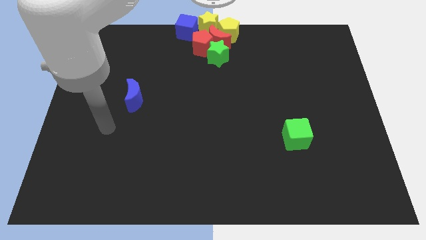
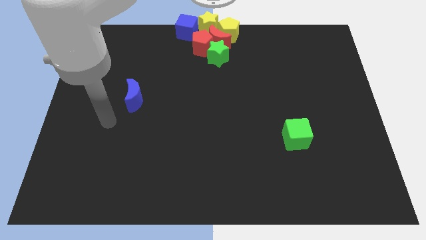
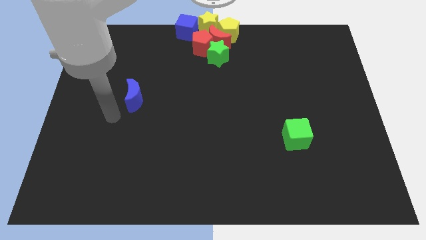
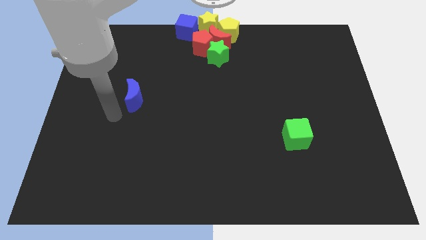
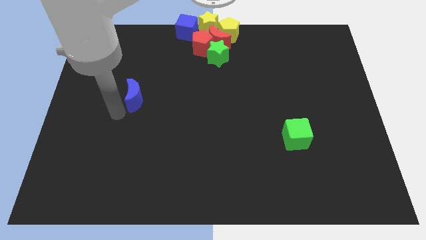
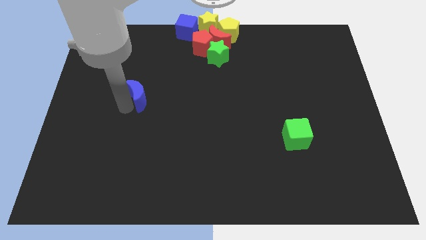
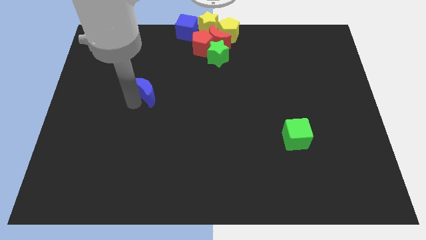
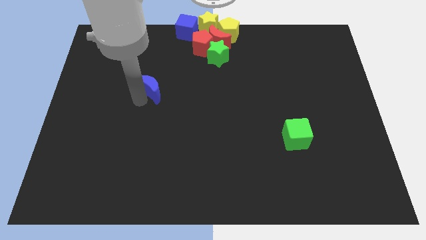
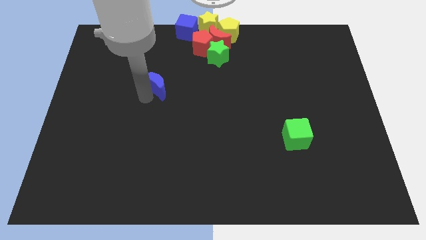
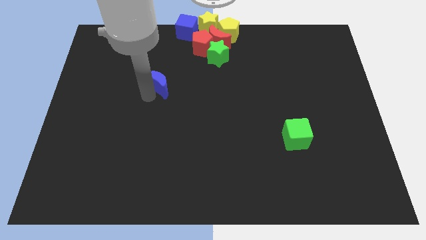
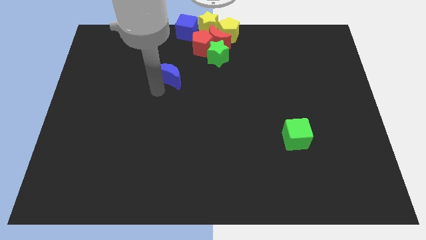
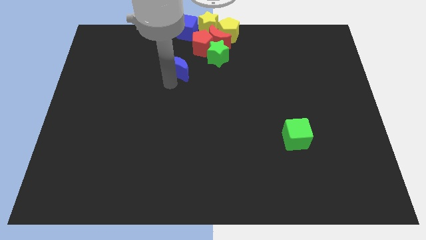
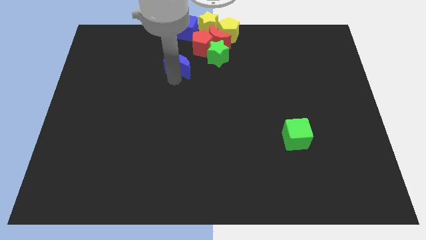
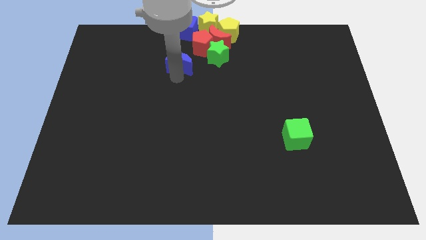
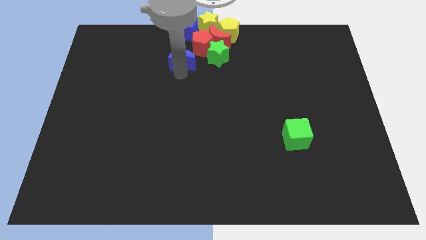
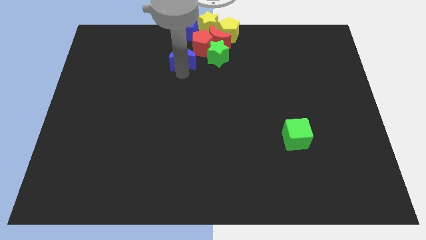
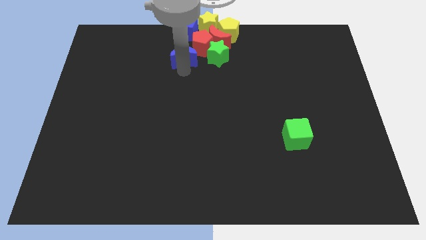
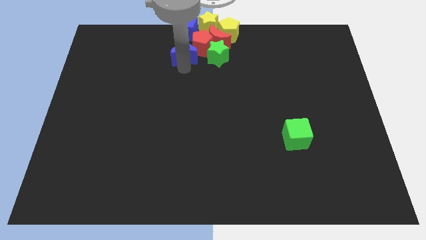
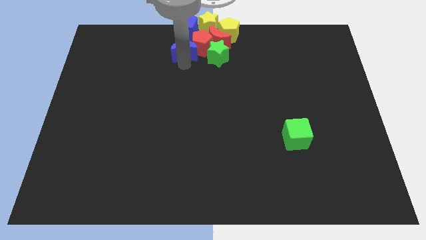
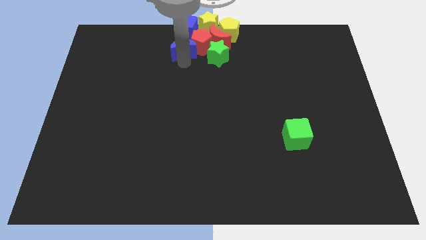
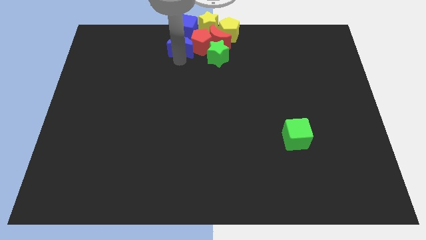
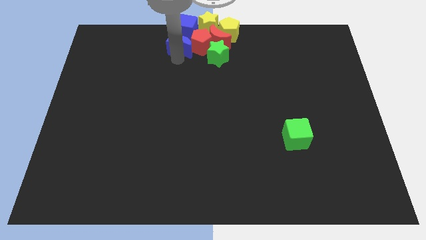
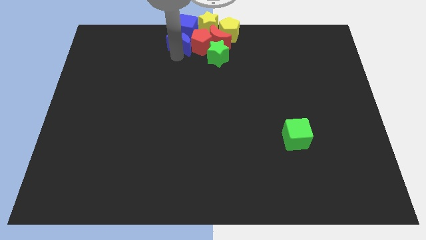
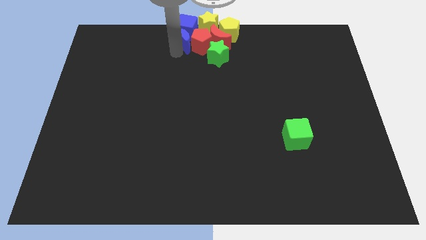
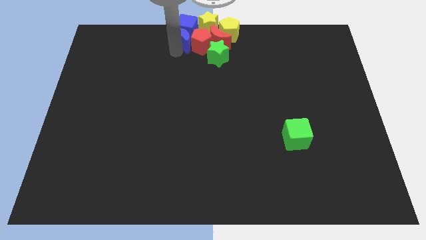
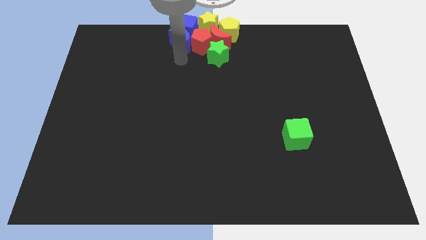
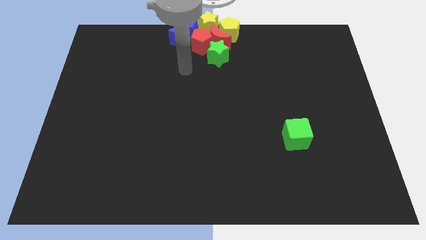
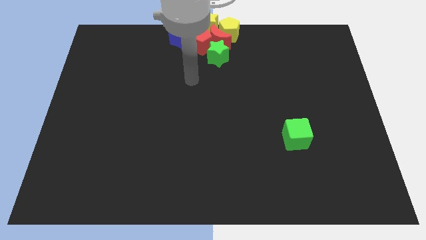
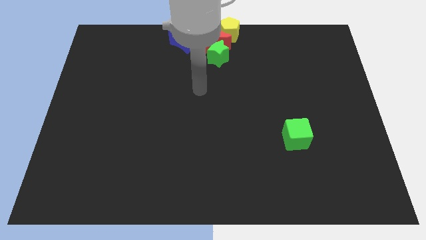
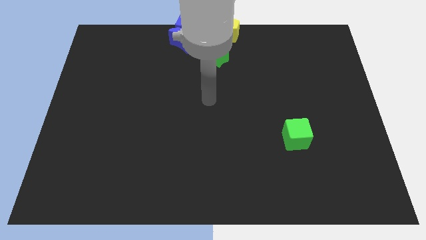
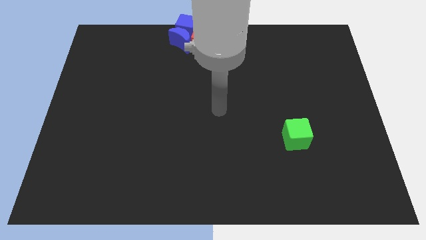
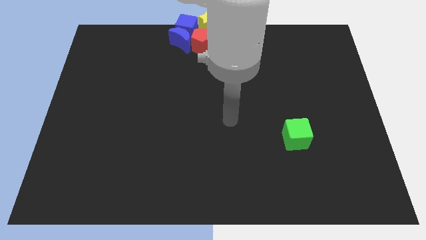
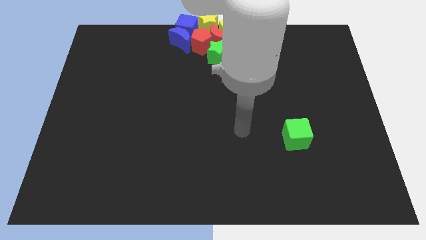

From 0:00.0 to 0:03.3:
place blue crescent left of red pentagon

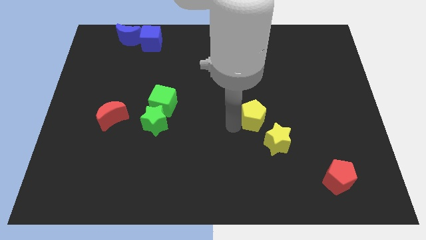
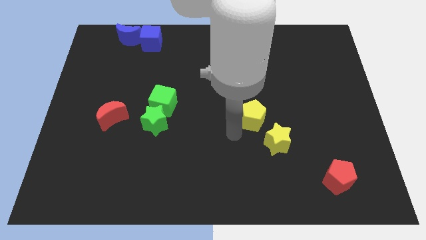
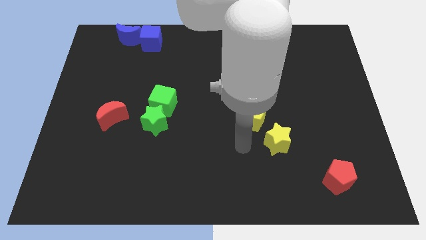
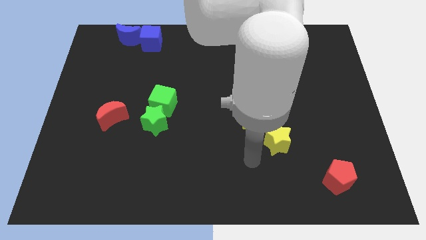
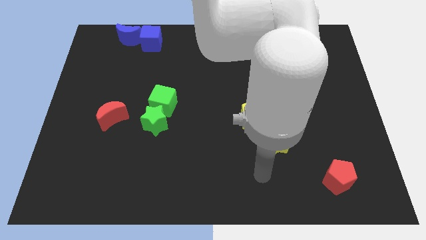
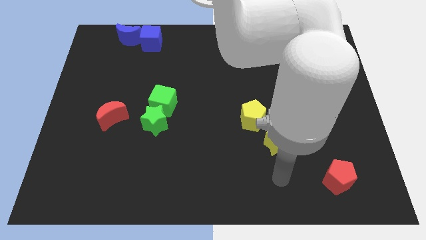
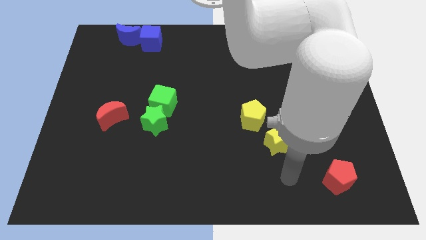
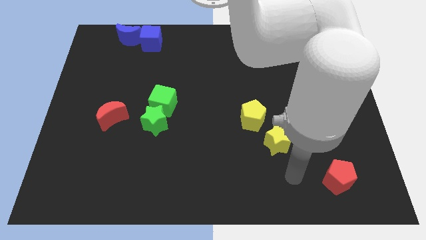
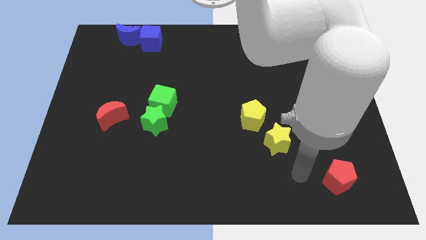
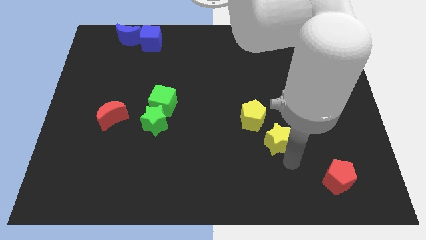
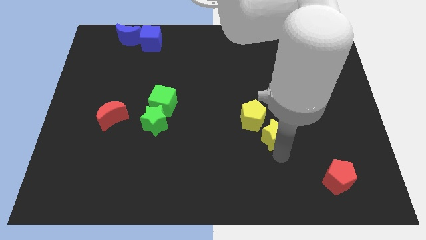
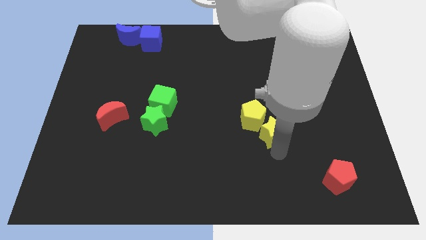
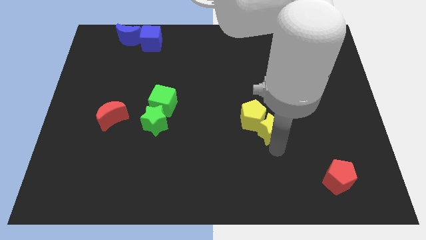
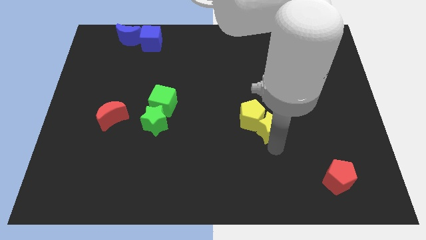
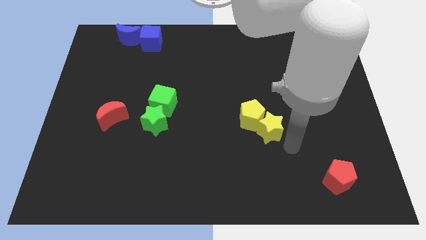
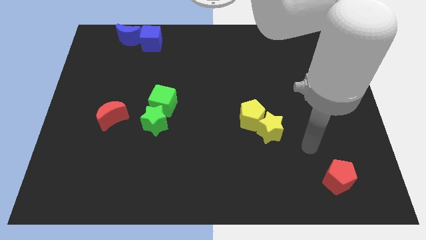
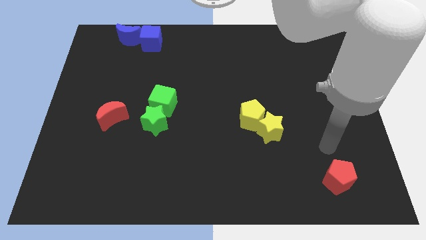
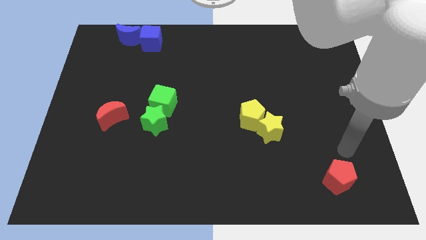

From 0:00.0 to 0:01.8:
move the yellow star into the yellow pentagon

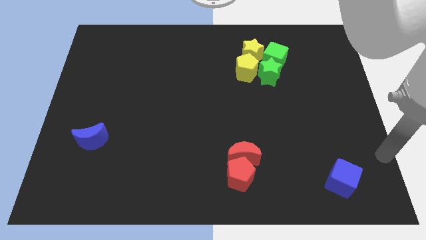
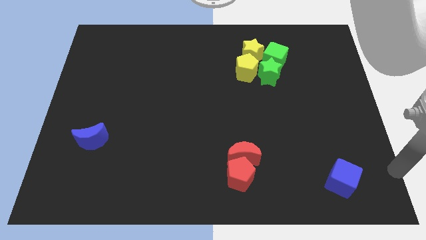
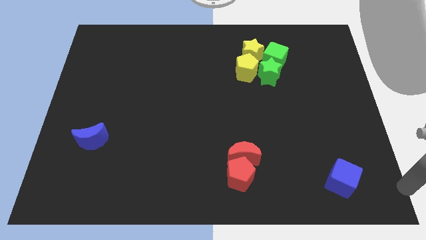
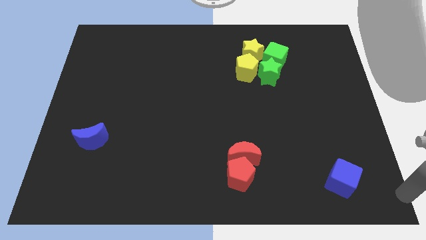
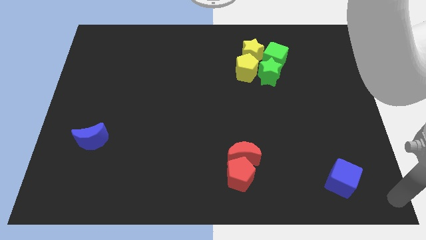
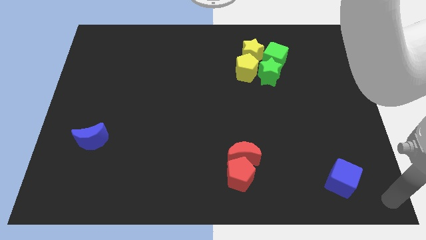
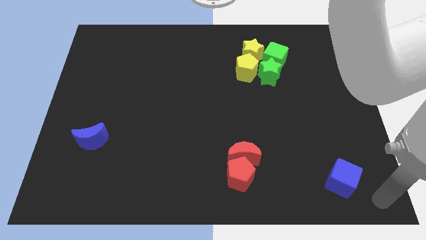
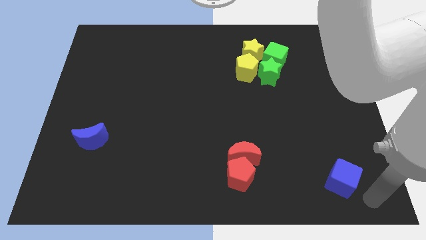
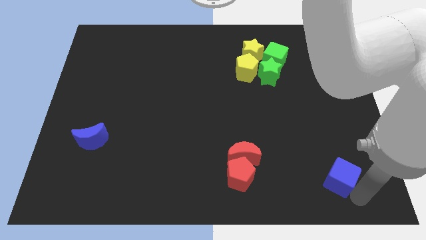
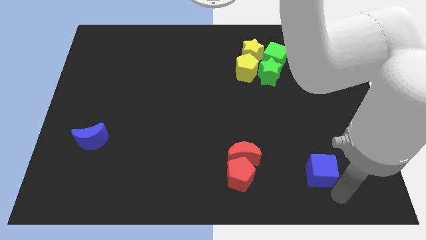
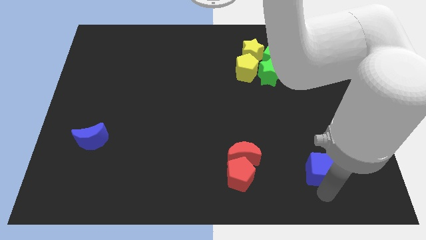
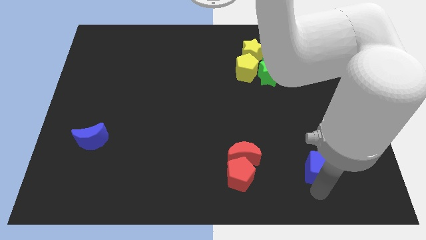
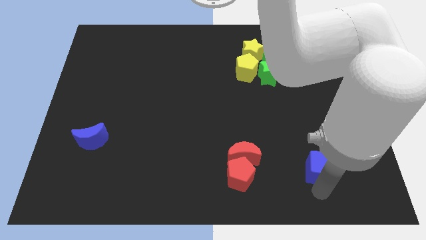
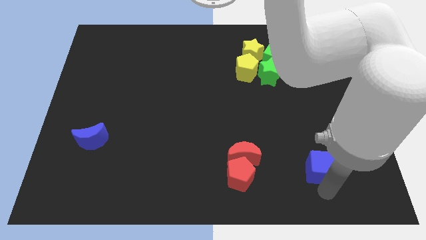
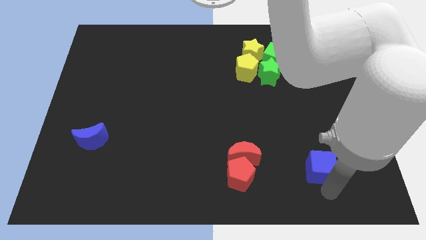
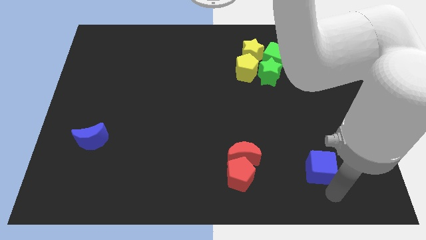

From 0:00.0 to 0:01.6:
push the blue cube slightly upward

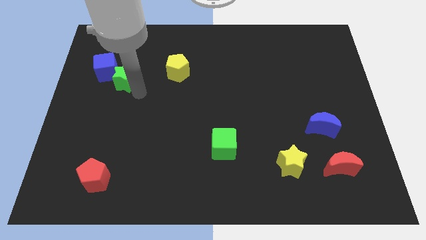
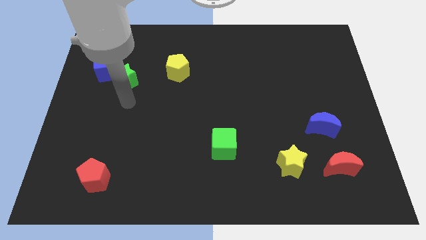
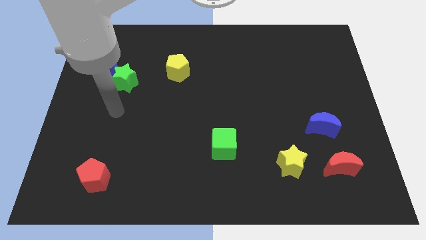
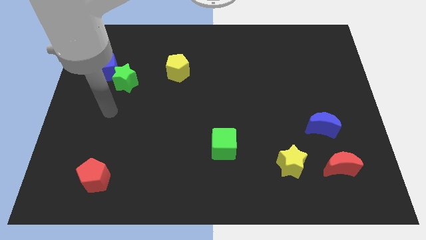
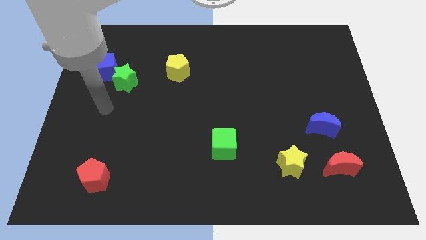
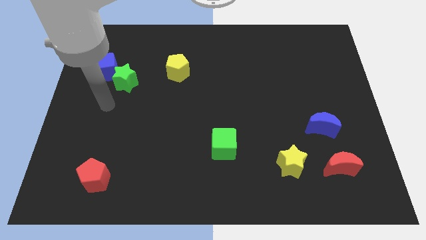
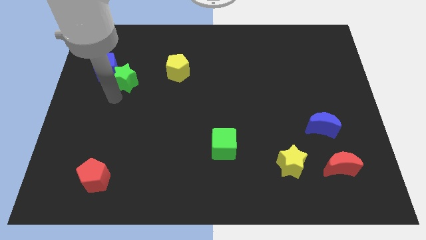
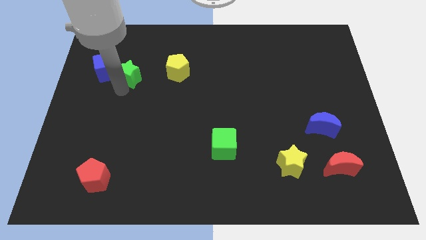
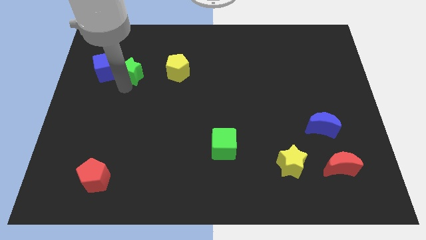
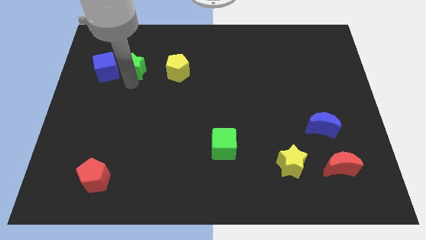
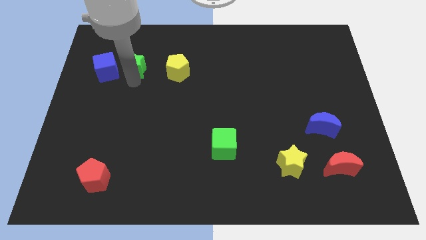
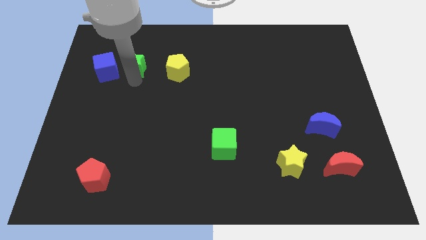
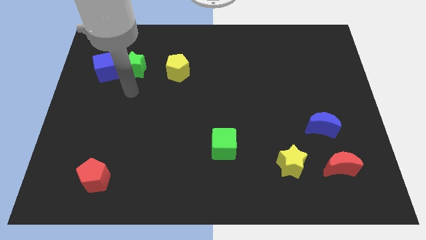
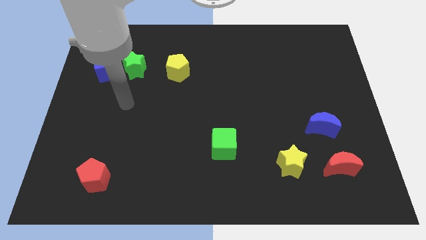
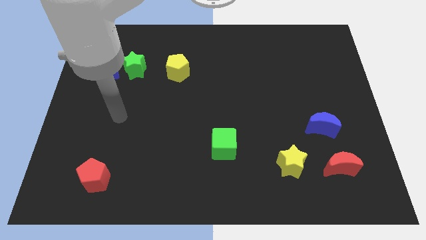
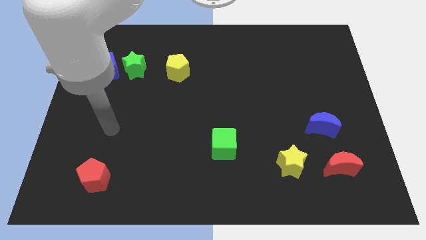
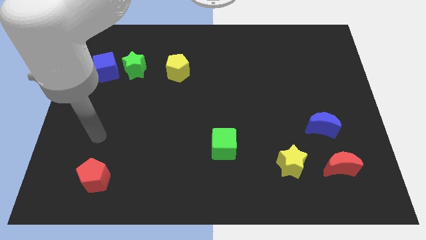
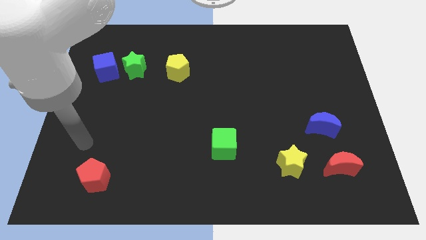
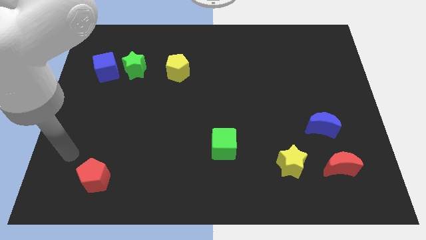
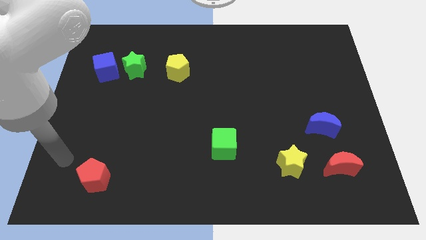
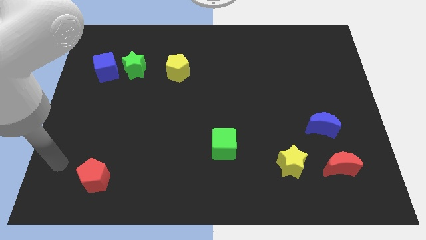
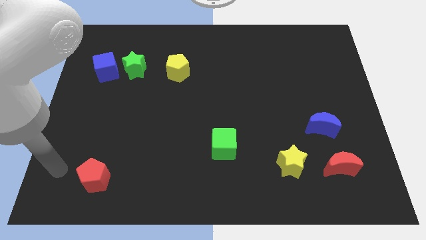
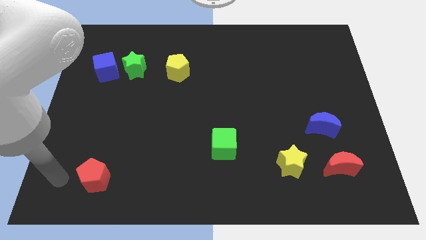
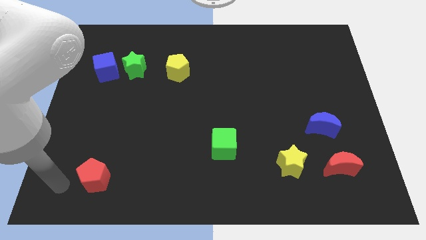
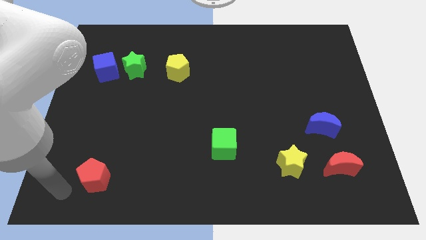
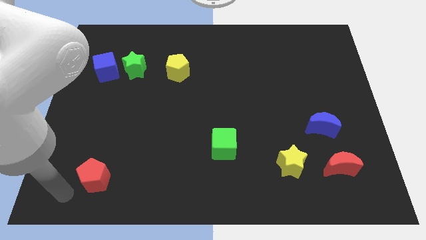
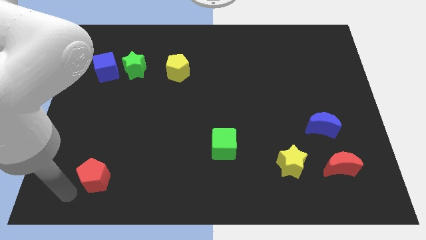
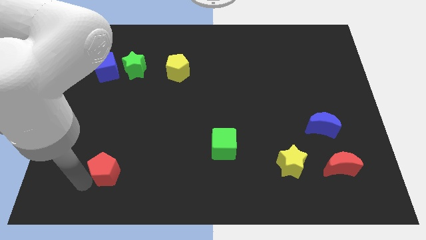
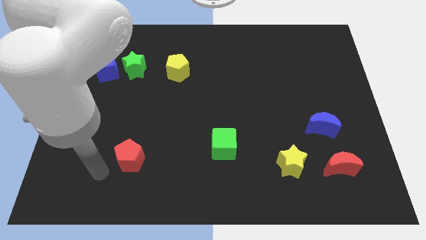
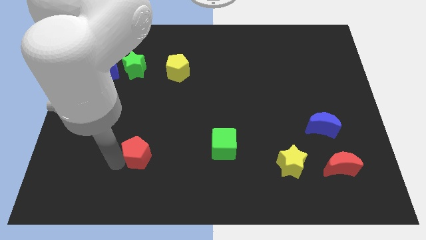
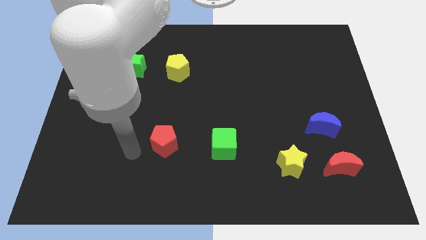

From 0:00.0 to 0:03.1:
move red pentagon towards the left side of the green cube
